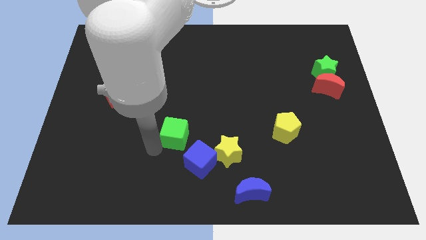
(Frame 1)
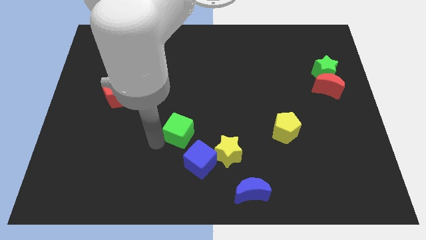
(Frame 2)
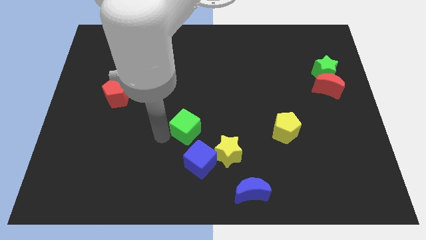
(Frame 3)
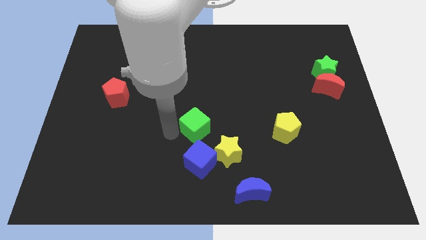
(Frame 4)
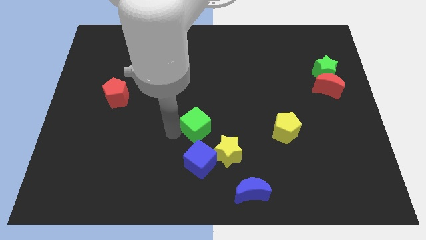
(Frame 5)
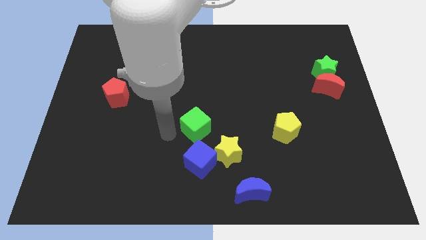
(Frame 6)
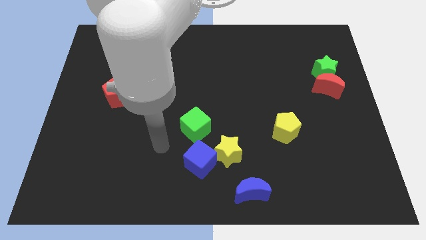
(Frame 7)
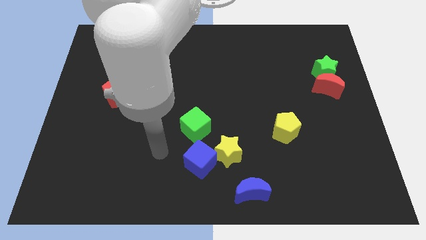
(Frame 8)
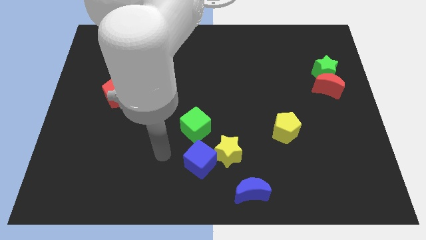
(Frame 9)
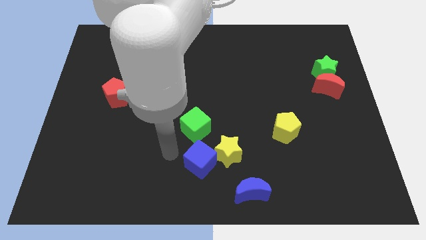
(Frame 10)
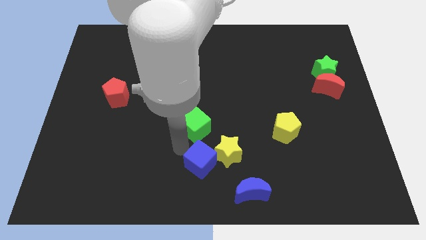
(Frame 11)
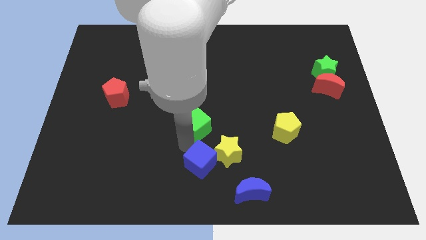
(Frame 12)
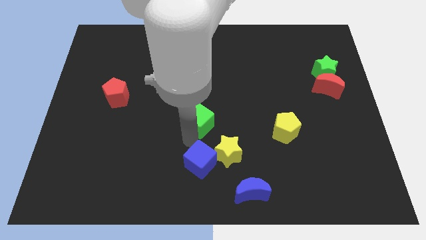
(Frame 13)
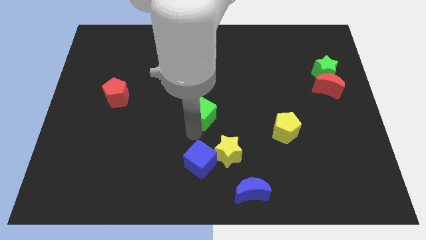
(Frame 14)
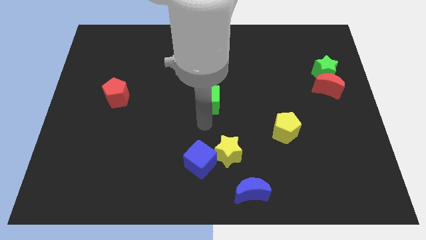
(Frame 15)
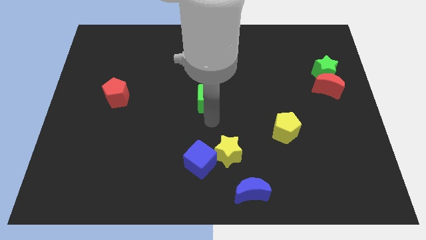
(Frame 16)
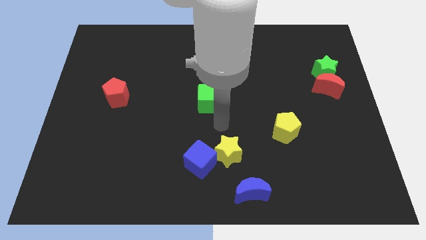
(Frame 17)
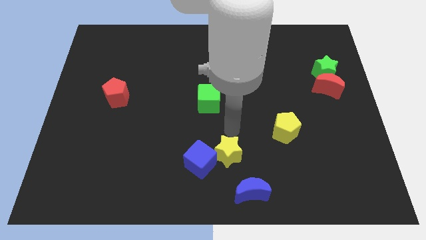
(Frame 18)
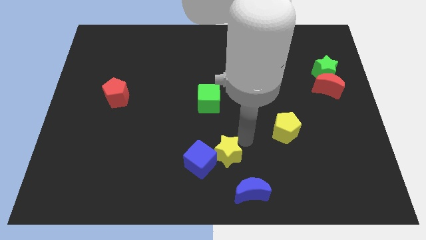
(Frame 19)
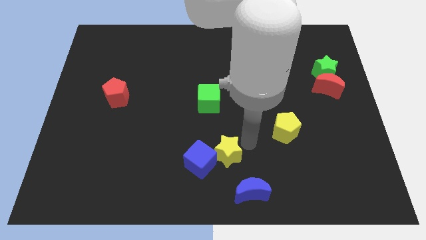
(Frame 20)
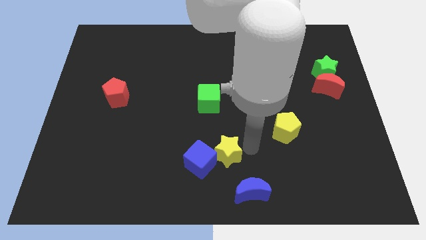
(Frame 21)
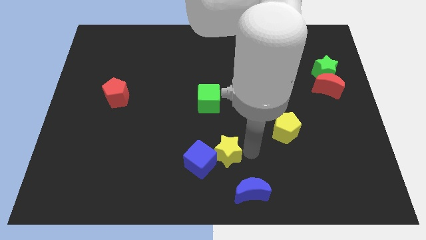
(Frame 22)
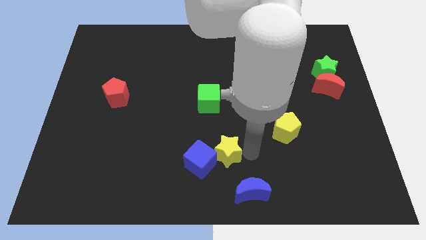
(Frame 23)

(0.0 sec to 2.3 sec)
place the green cube at the center of the board

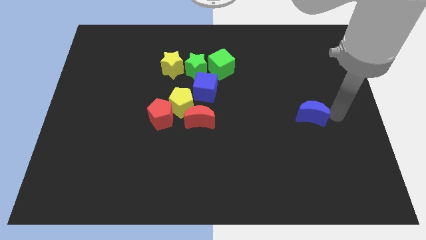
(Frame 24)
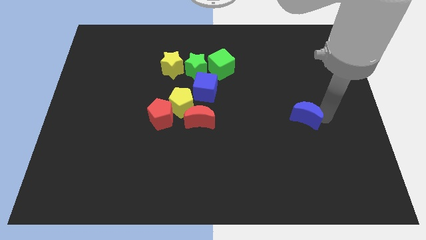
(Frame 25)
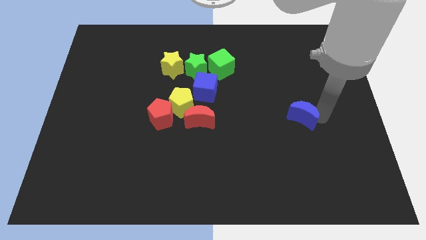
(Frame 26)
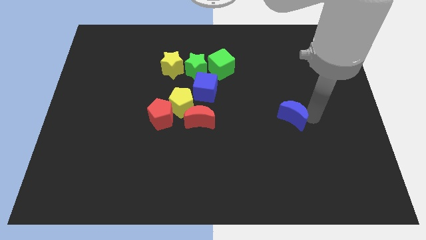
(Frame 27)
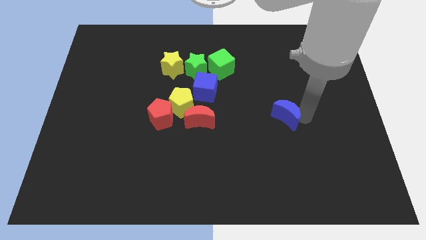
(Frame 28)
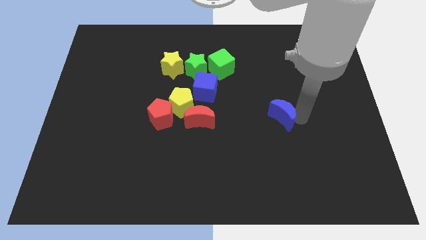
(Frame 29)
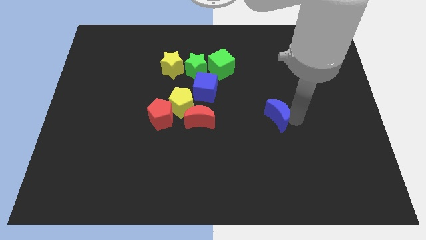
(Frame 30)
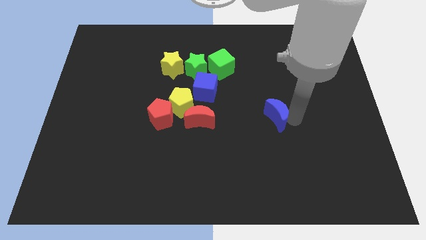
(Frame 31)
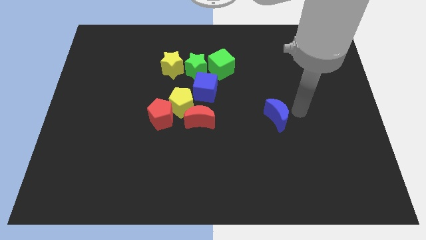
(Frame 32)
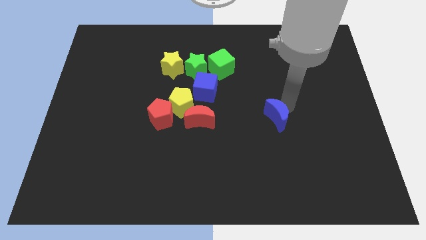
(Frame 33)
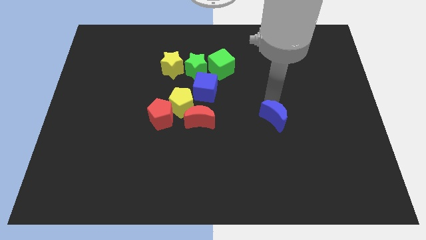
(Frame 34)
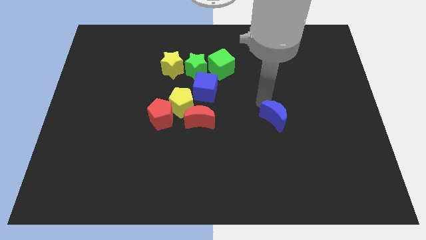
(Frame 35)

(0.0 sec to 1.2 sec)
move the blue moon slightly to the left

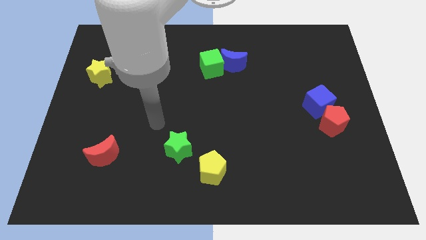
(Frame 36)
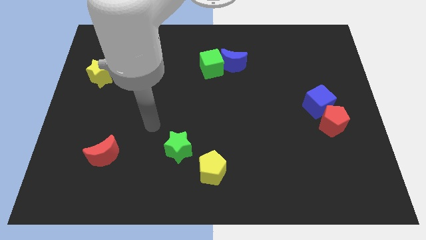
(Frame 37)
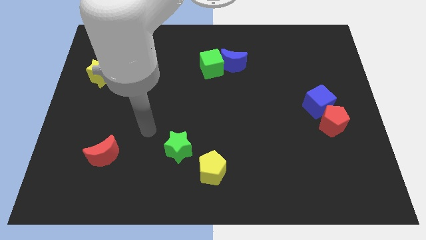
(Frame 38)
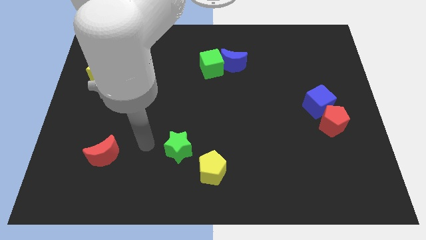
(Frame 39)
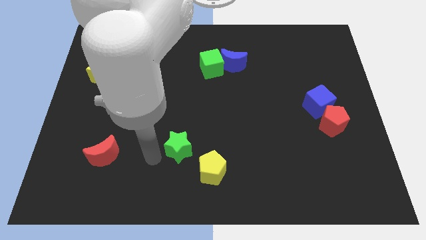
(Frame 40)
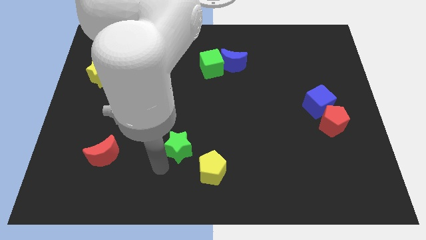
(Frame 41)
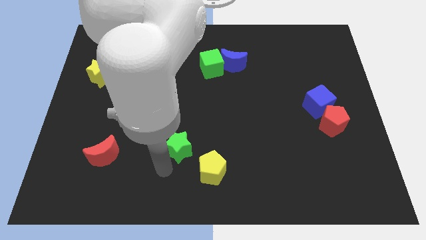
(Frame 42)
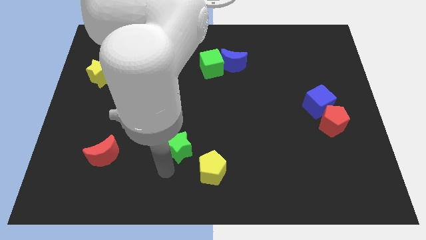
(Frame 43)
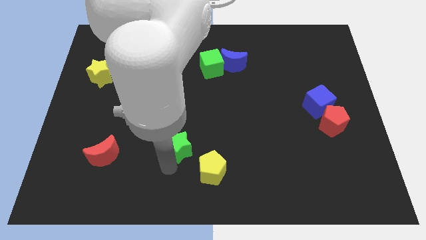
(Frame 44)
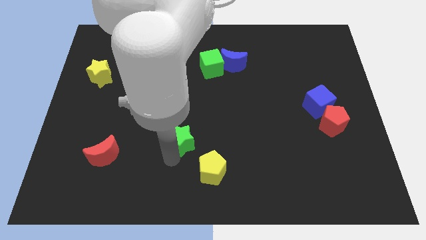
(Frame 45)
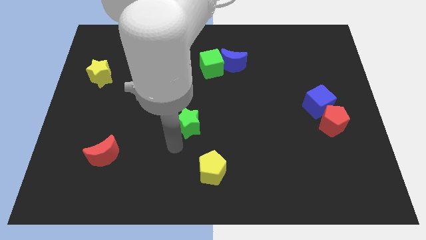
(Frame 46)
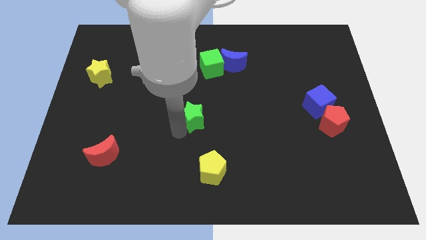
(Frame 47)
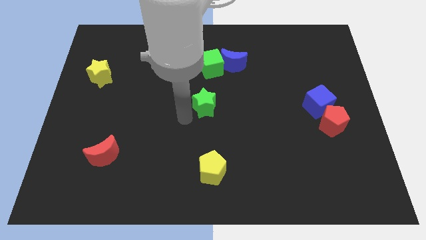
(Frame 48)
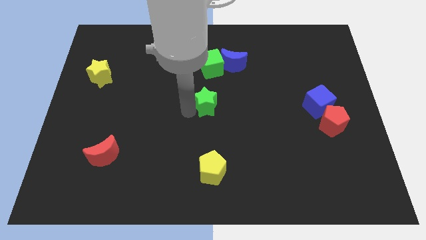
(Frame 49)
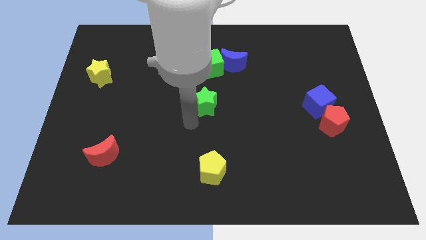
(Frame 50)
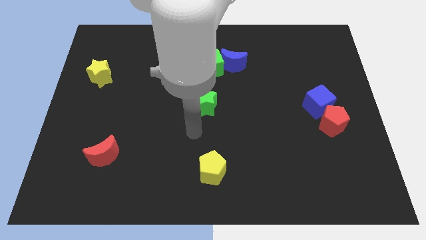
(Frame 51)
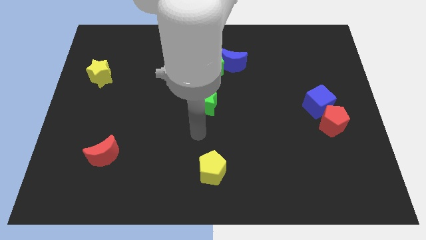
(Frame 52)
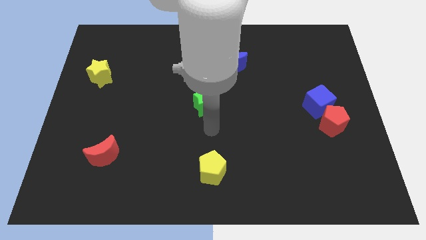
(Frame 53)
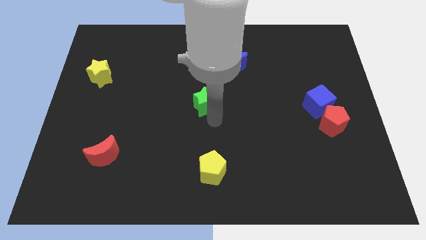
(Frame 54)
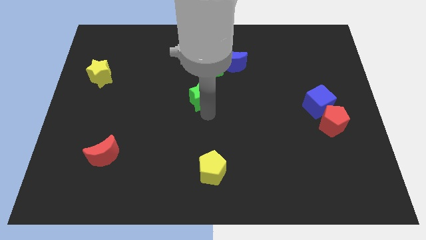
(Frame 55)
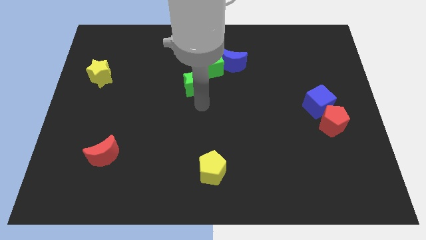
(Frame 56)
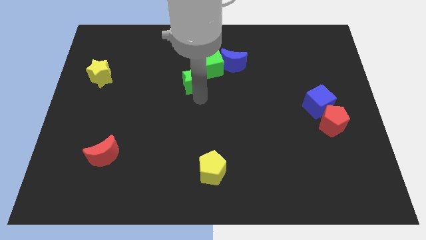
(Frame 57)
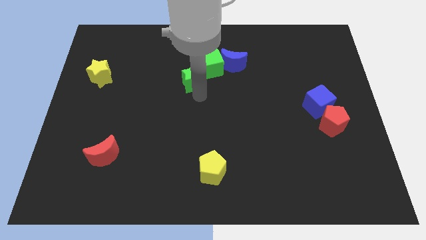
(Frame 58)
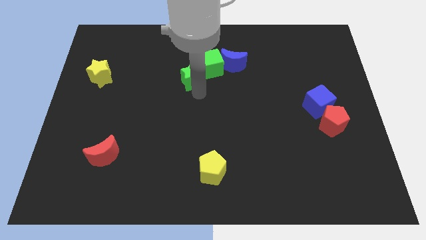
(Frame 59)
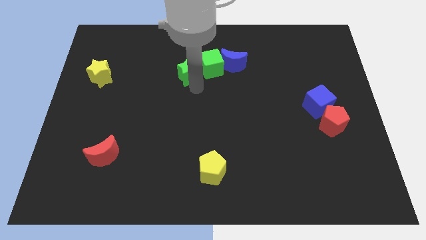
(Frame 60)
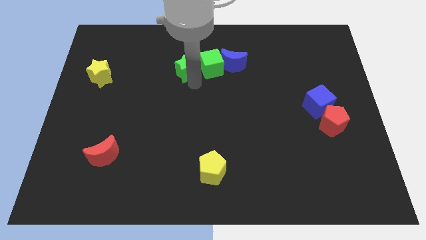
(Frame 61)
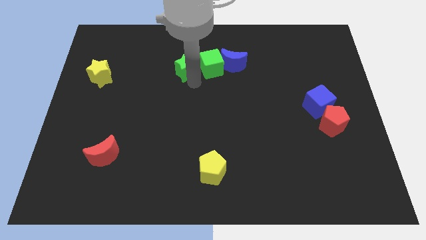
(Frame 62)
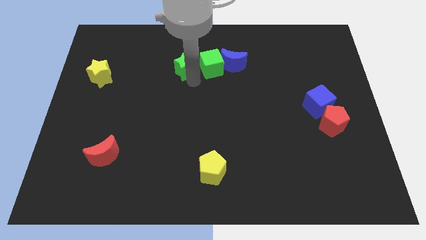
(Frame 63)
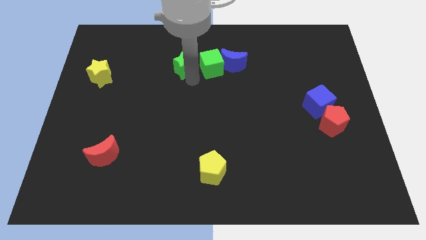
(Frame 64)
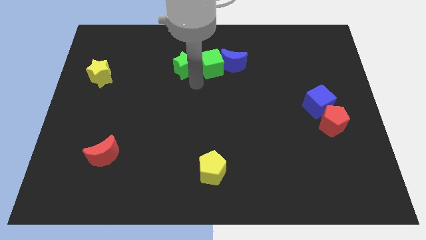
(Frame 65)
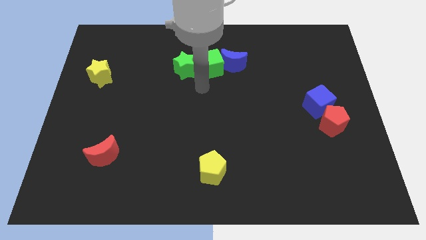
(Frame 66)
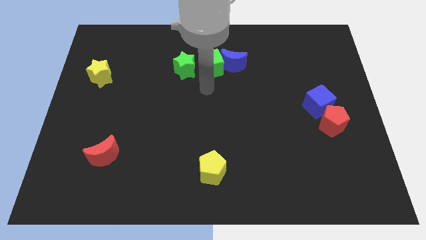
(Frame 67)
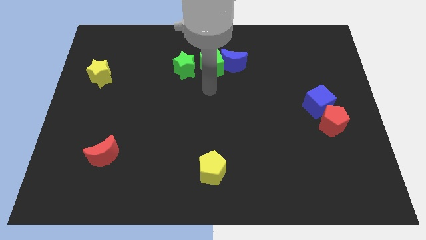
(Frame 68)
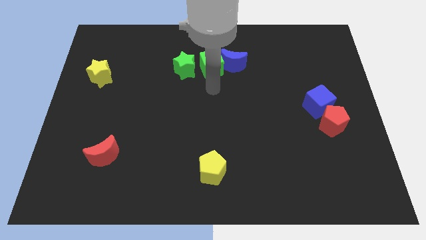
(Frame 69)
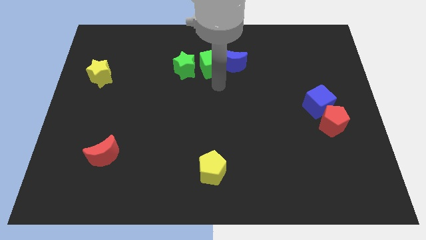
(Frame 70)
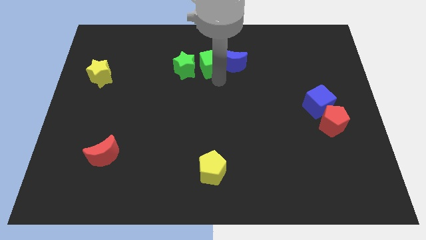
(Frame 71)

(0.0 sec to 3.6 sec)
place the green star horizontal to the green cube

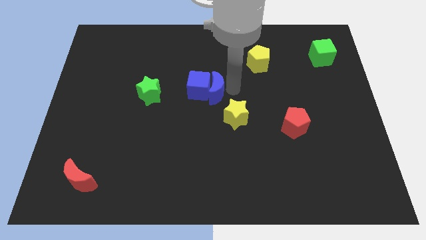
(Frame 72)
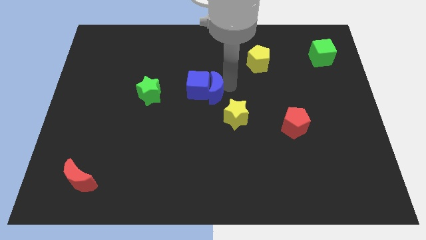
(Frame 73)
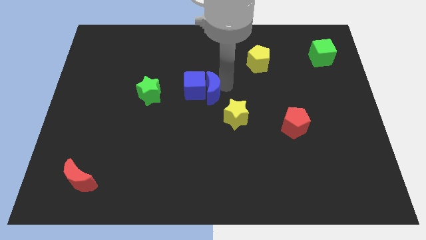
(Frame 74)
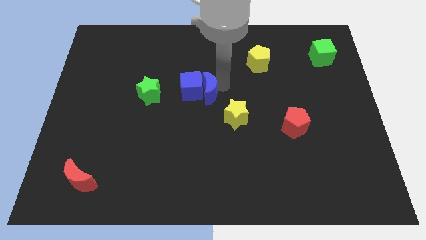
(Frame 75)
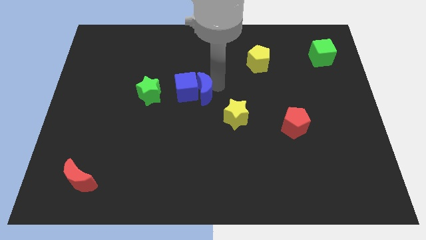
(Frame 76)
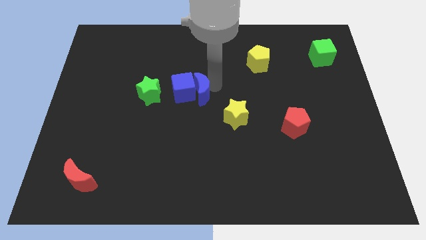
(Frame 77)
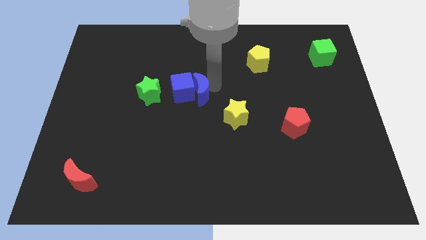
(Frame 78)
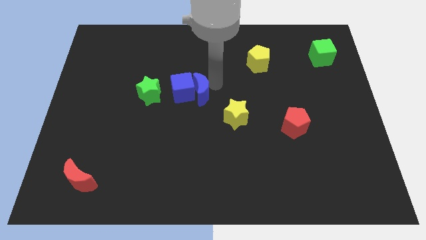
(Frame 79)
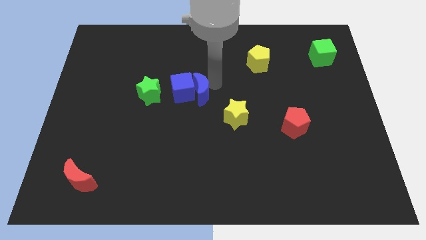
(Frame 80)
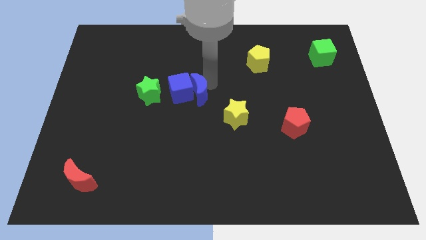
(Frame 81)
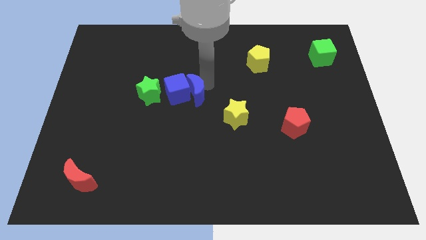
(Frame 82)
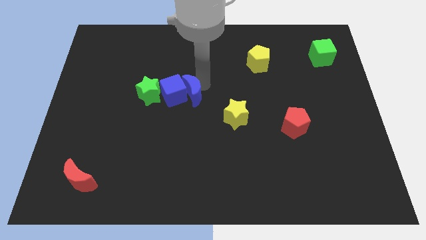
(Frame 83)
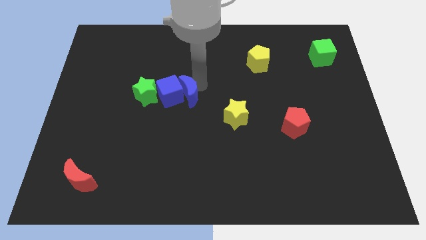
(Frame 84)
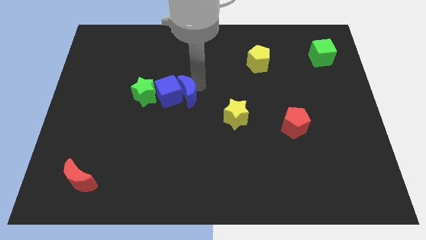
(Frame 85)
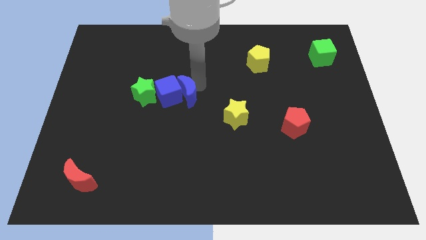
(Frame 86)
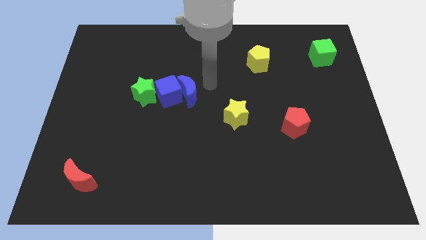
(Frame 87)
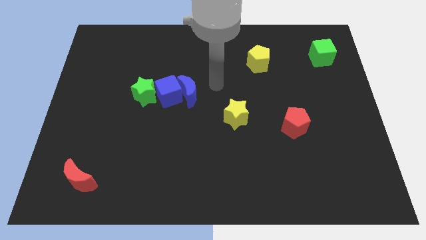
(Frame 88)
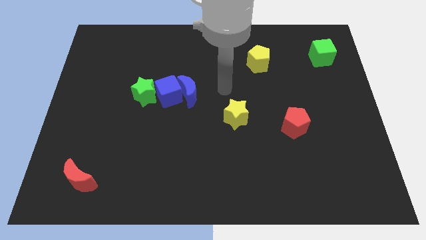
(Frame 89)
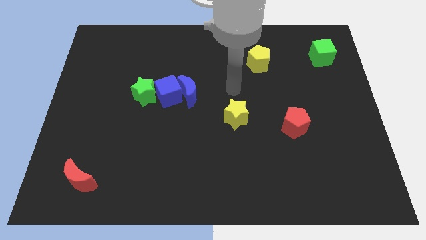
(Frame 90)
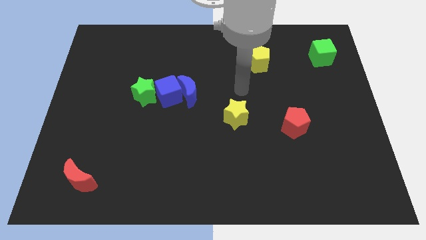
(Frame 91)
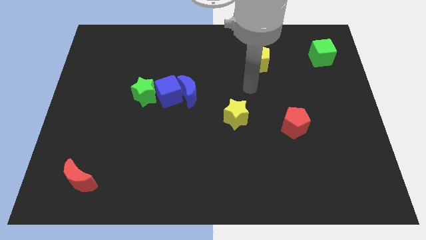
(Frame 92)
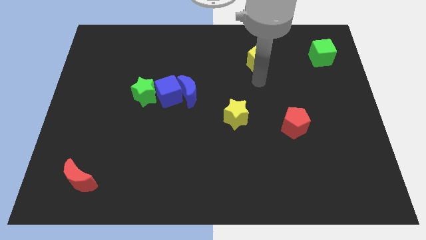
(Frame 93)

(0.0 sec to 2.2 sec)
push the blue blocks into the green star
